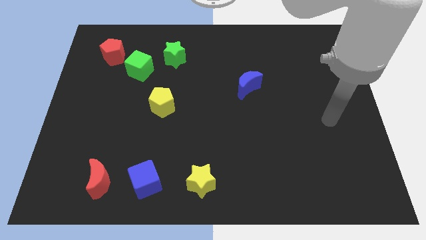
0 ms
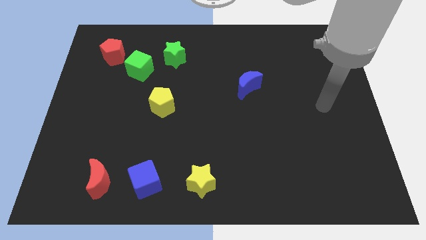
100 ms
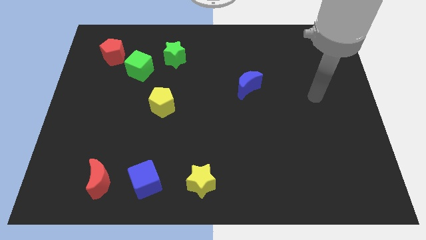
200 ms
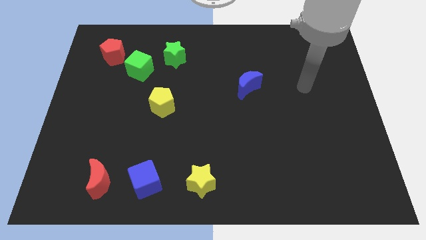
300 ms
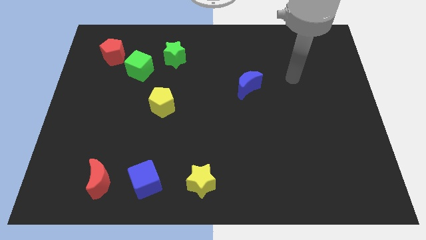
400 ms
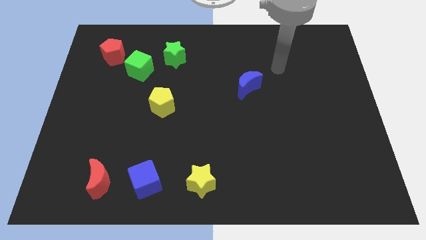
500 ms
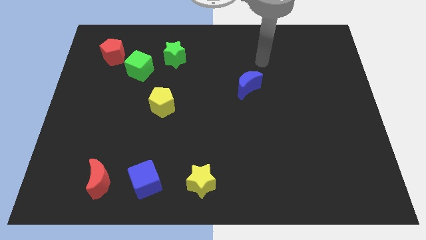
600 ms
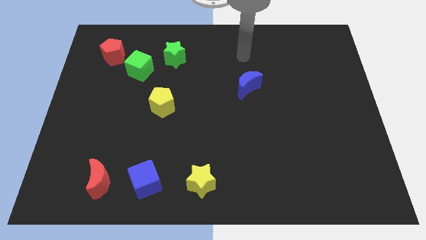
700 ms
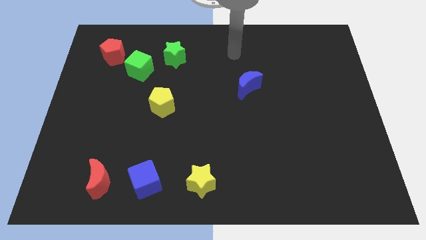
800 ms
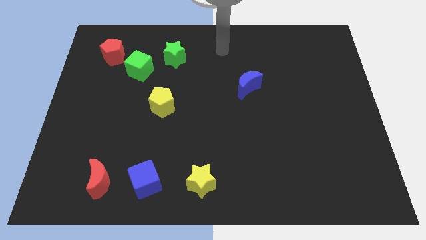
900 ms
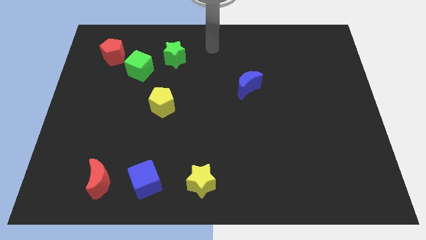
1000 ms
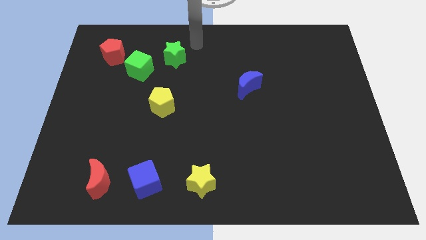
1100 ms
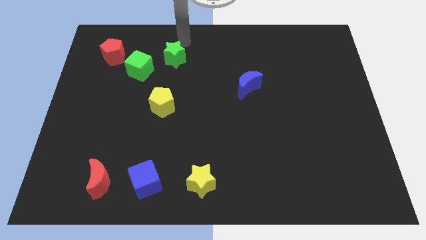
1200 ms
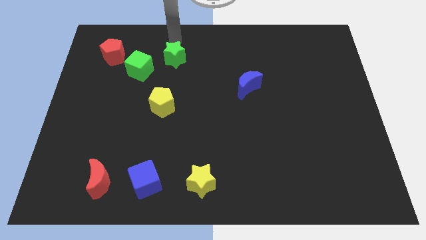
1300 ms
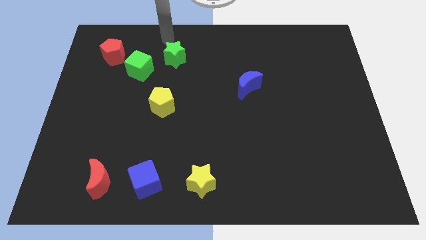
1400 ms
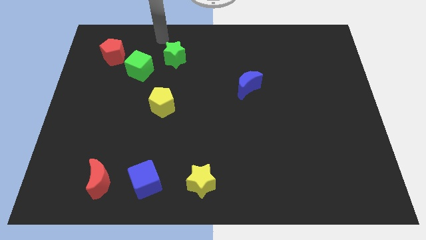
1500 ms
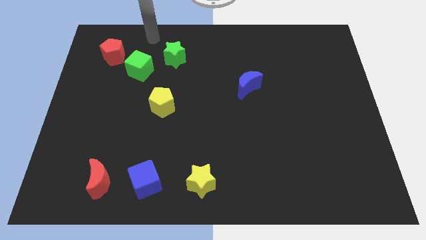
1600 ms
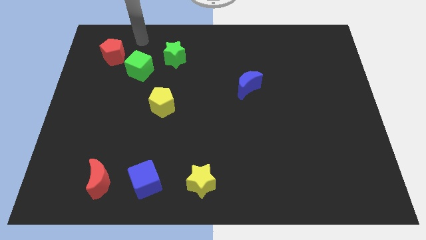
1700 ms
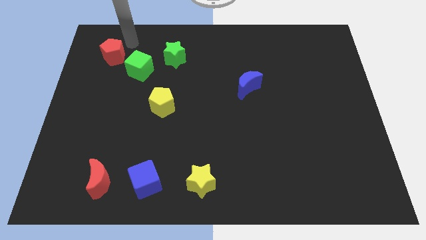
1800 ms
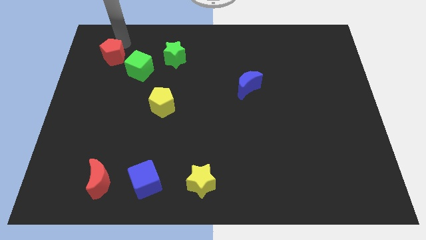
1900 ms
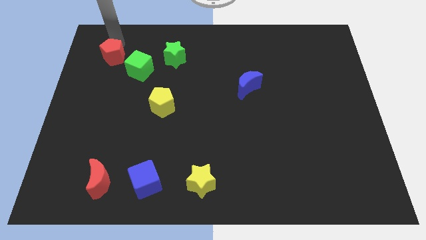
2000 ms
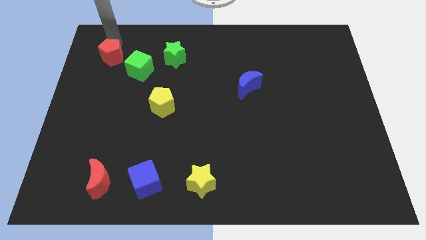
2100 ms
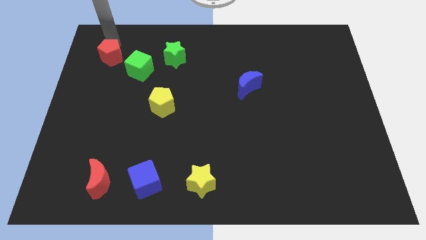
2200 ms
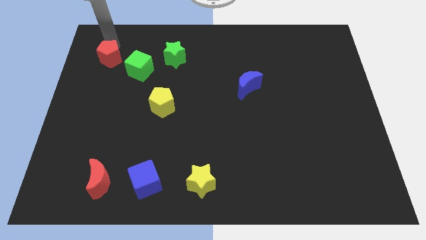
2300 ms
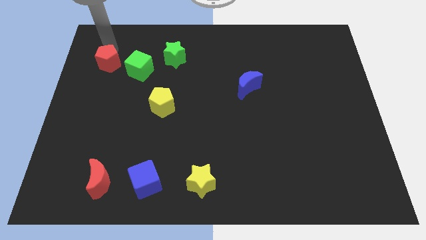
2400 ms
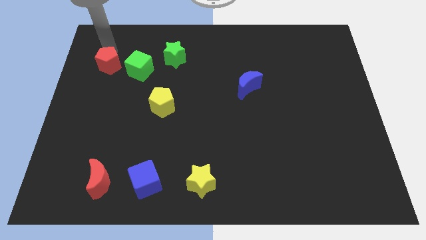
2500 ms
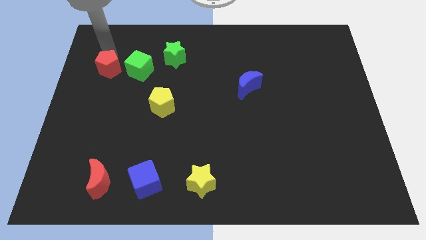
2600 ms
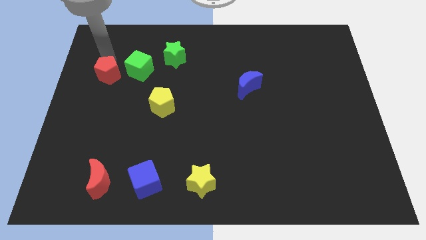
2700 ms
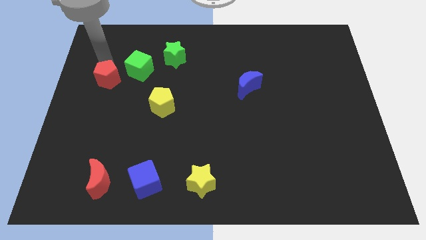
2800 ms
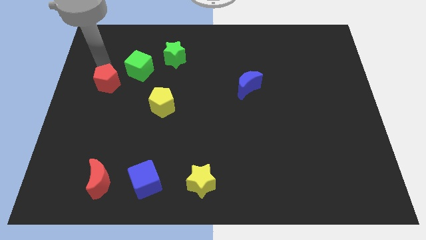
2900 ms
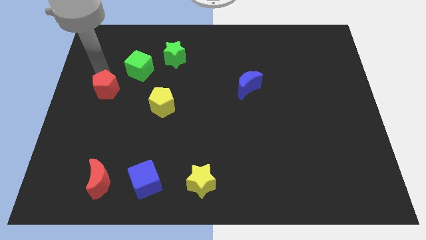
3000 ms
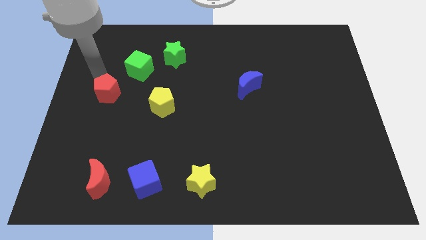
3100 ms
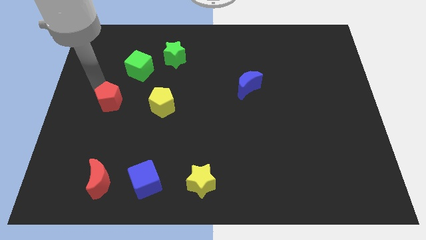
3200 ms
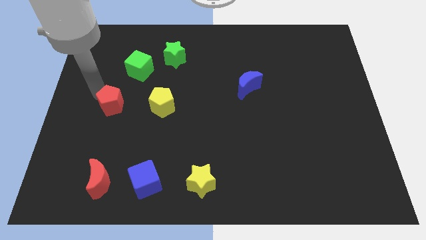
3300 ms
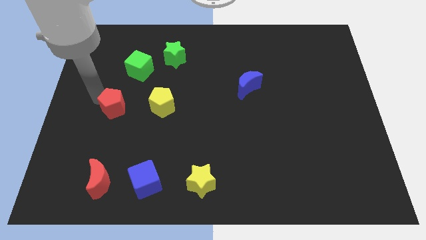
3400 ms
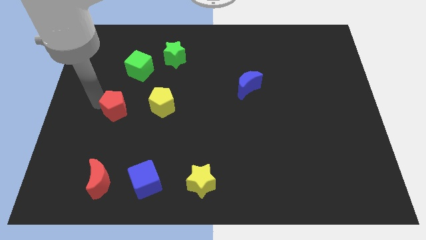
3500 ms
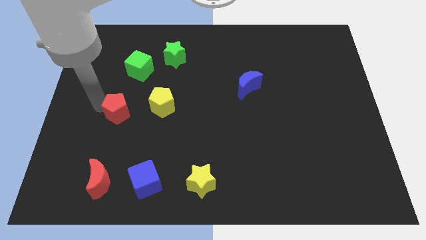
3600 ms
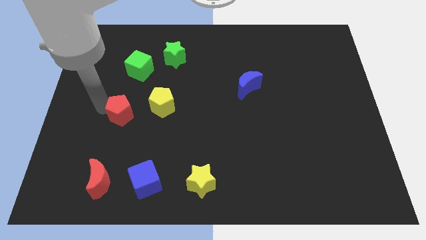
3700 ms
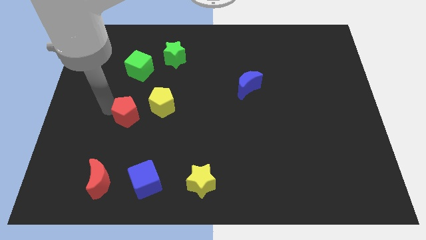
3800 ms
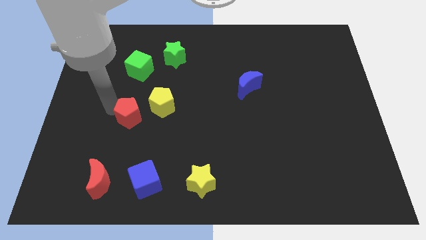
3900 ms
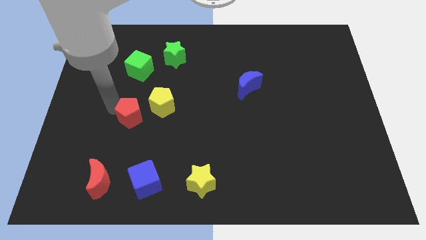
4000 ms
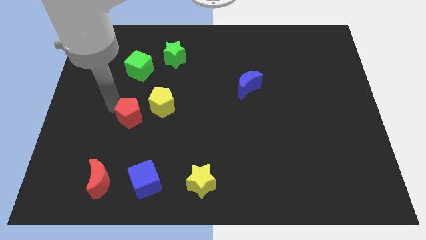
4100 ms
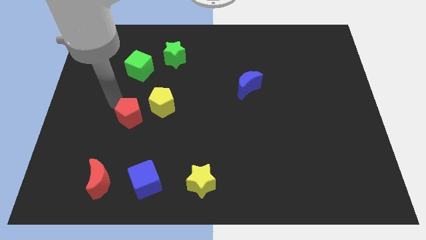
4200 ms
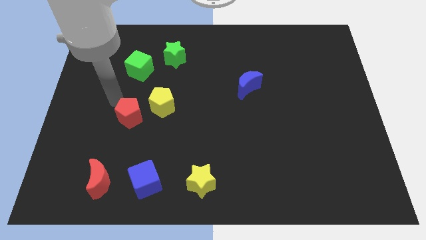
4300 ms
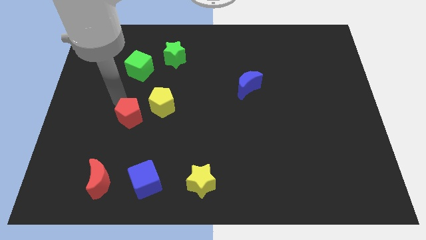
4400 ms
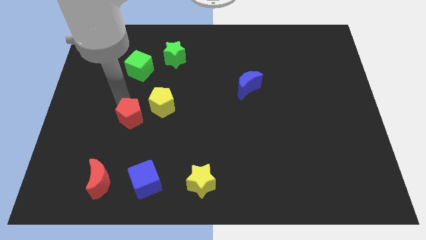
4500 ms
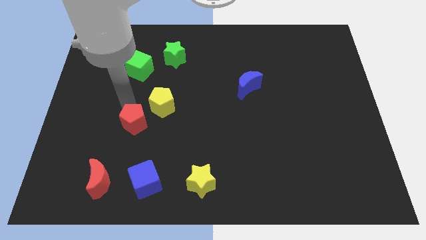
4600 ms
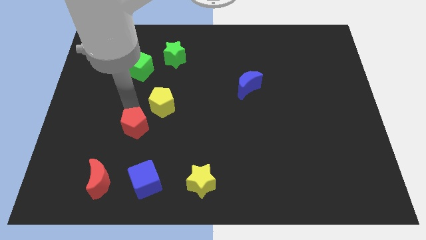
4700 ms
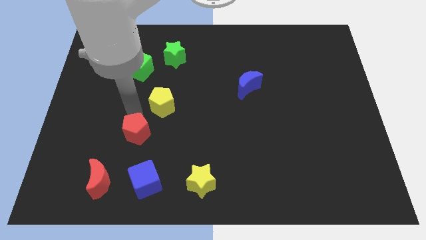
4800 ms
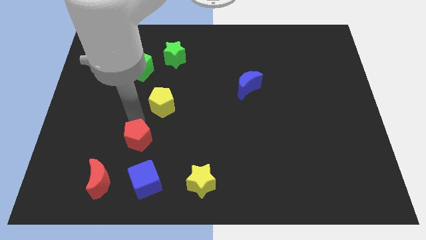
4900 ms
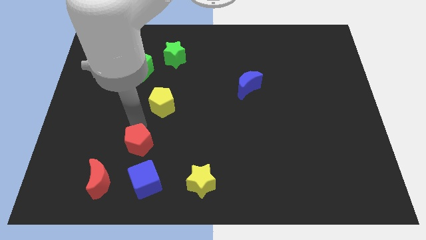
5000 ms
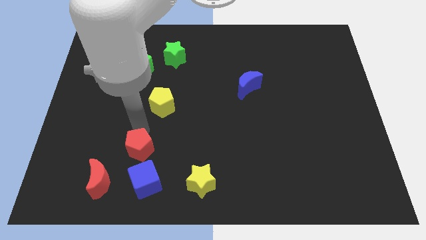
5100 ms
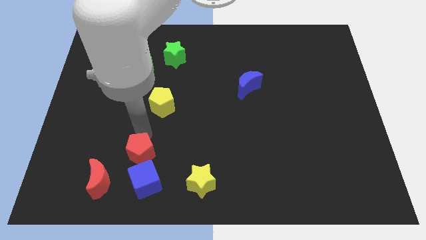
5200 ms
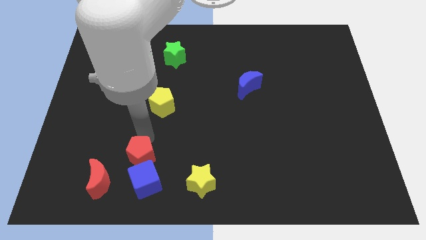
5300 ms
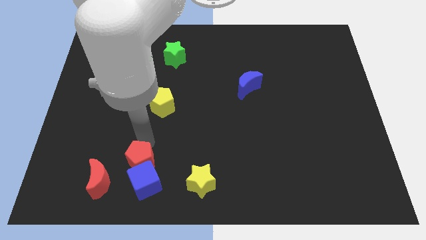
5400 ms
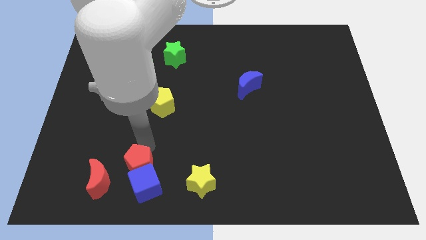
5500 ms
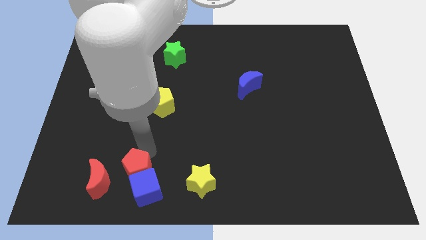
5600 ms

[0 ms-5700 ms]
slide the red pentagon to the blue cube

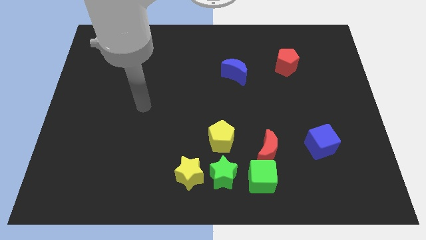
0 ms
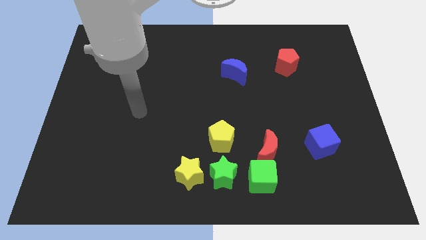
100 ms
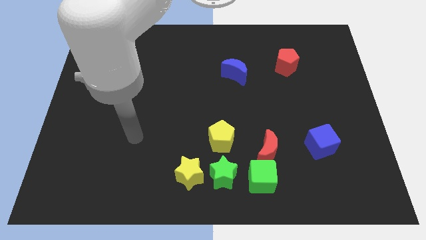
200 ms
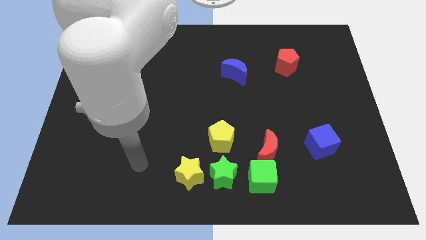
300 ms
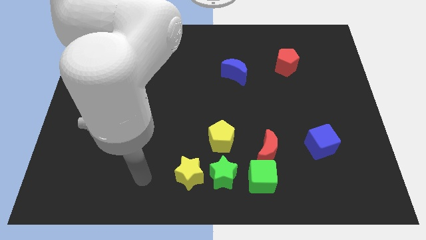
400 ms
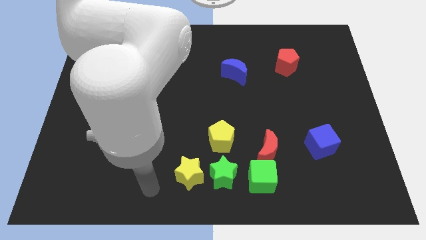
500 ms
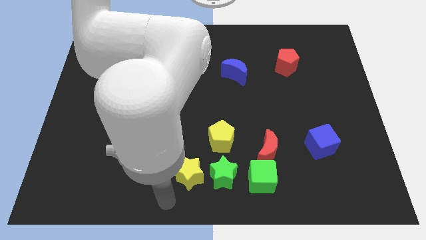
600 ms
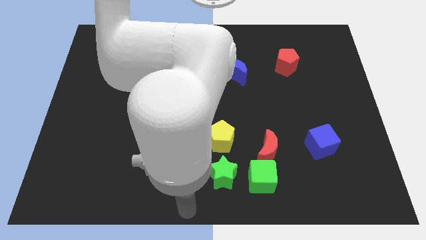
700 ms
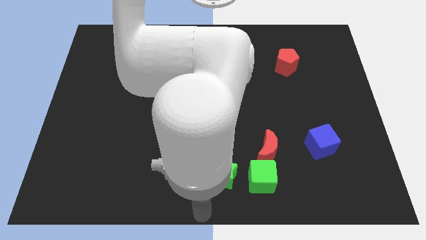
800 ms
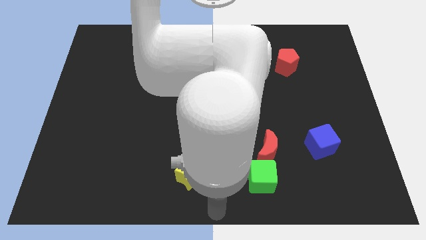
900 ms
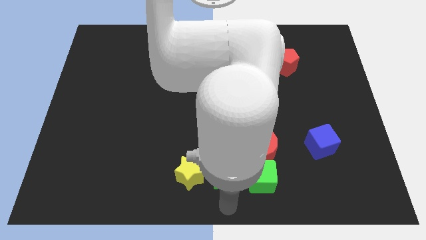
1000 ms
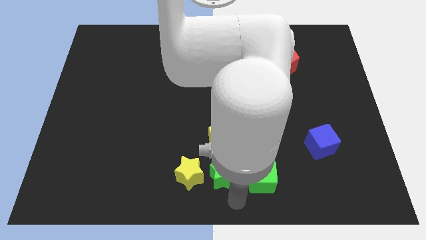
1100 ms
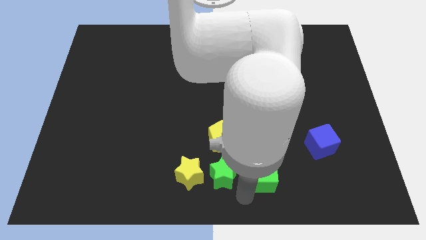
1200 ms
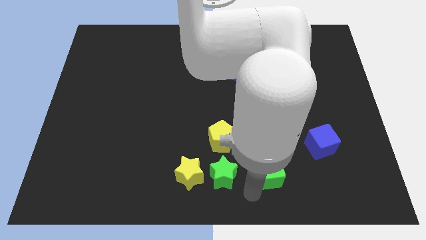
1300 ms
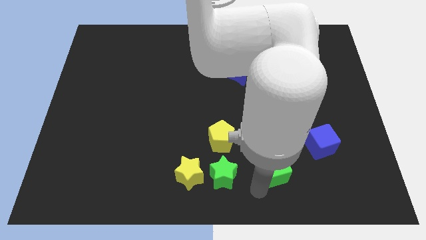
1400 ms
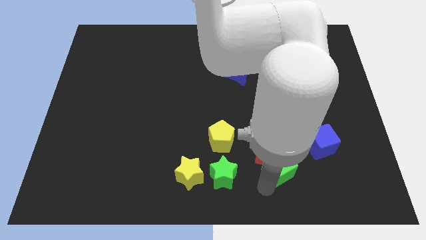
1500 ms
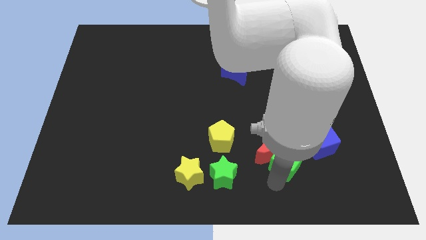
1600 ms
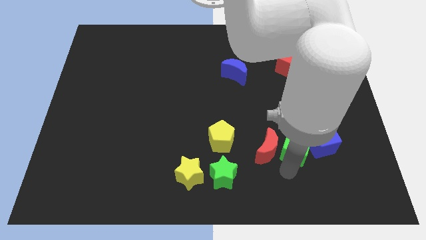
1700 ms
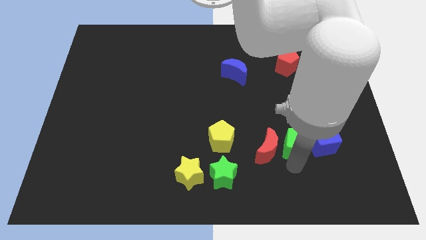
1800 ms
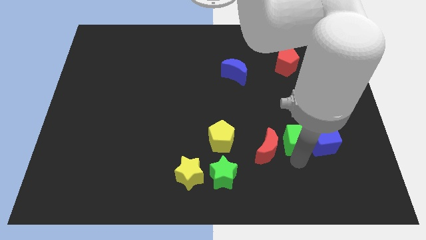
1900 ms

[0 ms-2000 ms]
push the green cube to the blue cube

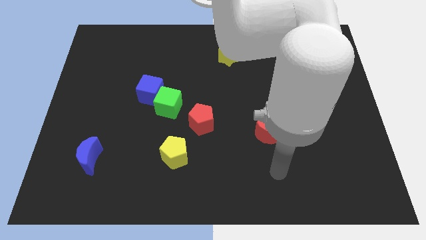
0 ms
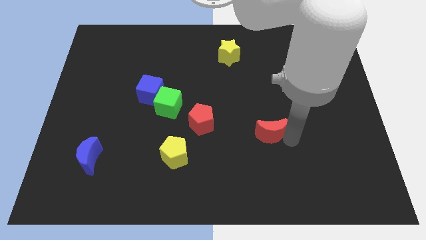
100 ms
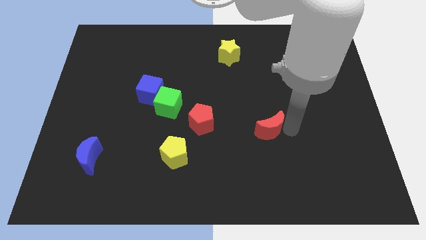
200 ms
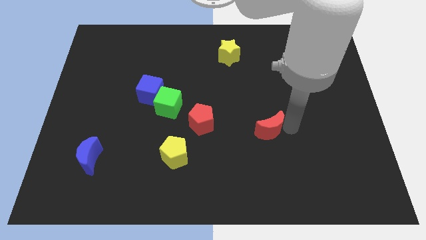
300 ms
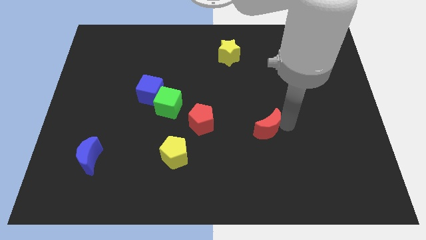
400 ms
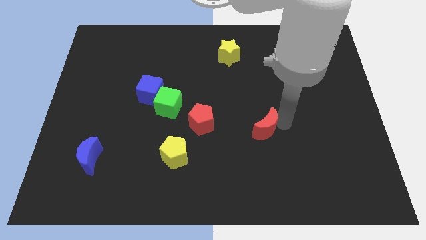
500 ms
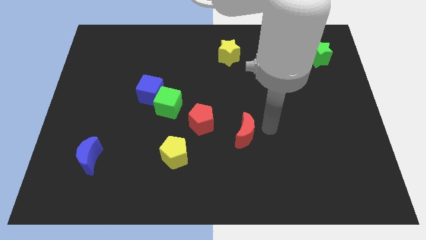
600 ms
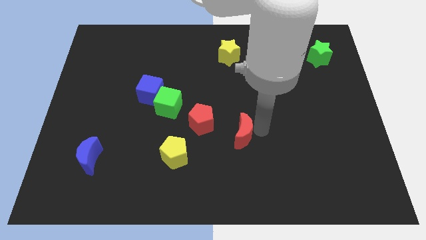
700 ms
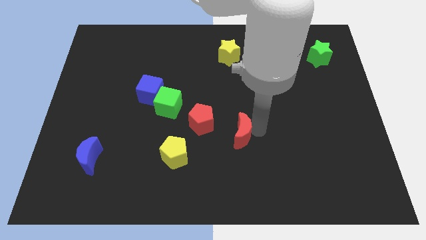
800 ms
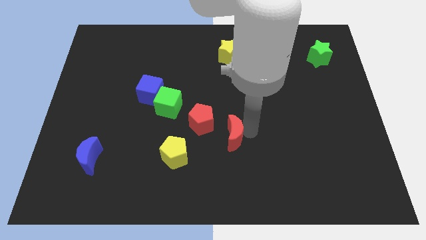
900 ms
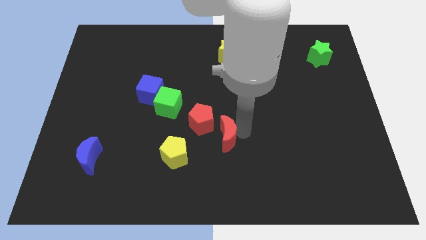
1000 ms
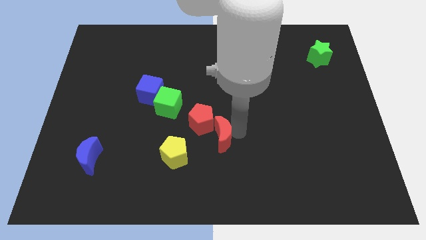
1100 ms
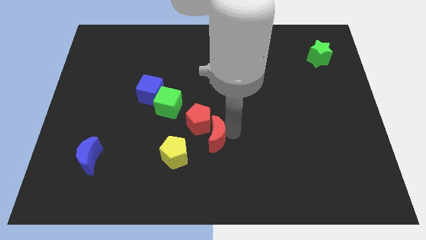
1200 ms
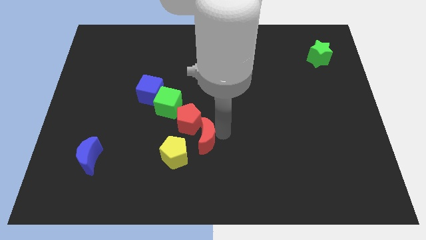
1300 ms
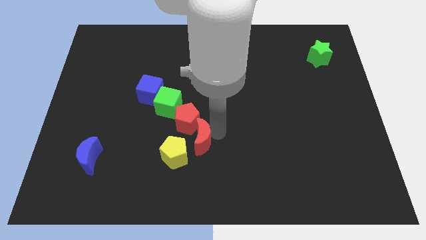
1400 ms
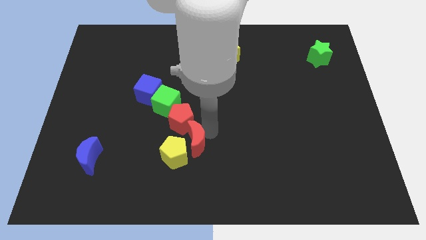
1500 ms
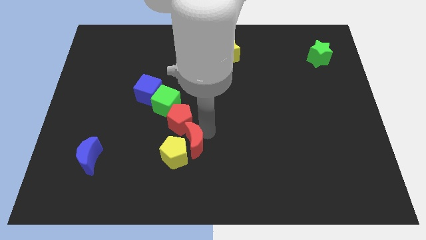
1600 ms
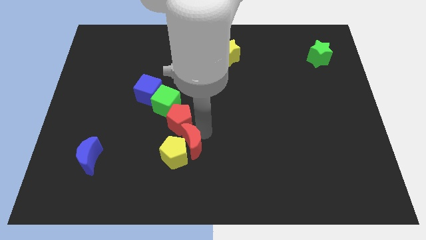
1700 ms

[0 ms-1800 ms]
slide the red moon towards the yellow pentagon
